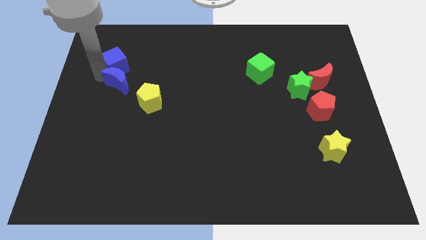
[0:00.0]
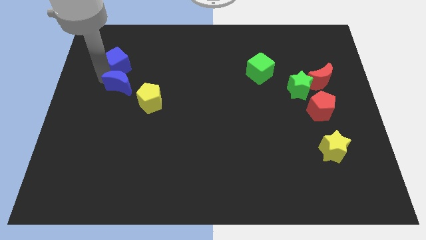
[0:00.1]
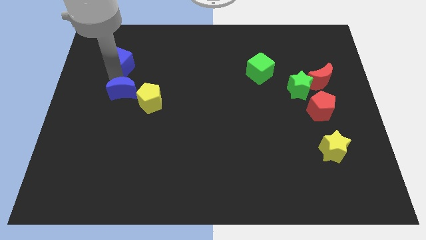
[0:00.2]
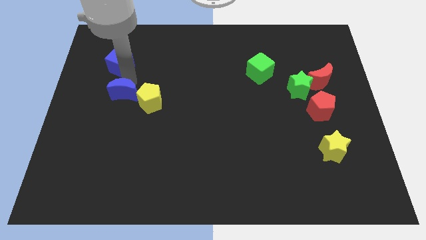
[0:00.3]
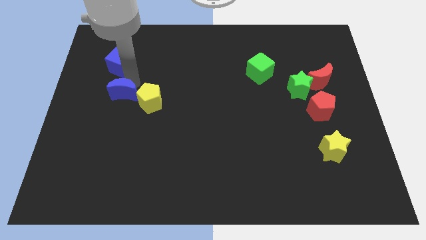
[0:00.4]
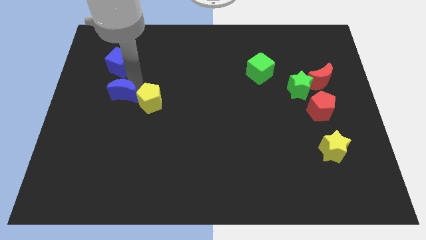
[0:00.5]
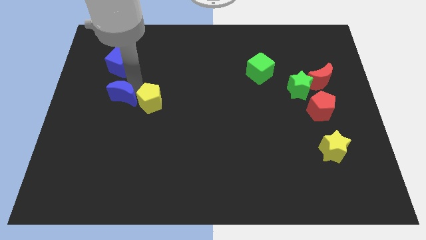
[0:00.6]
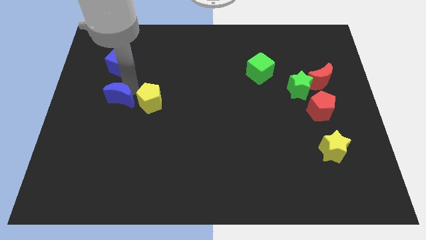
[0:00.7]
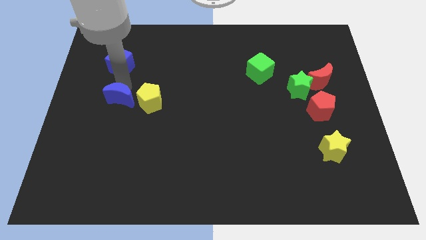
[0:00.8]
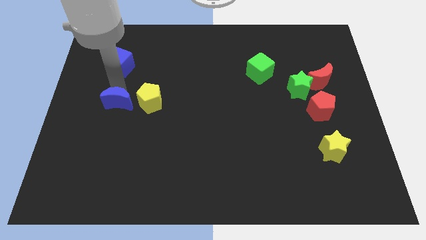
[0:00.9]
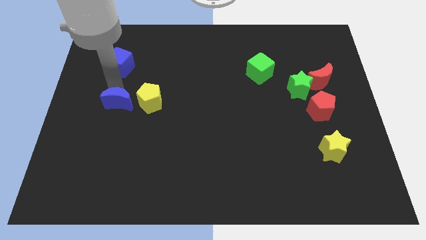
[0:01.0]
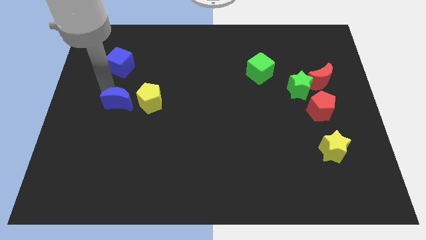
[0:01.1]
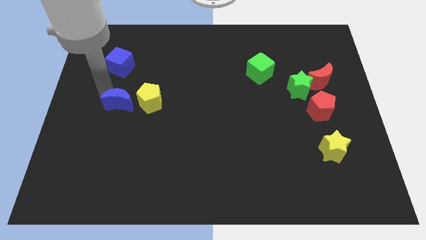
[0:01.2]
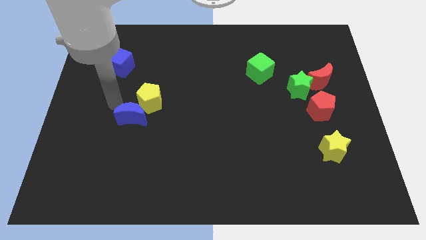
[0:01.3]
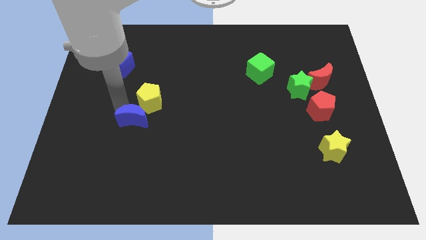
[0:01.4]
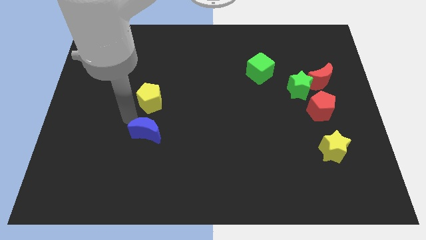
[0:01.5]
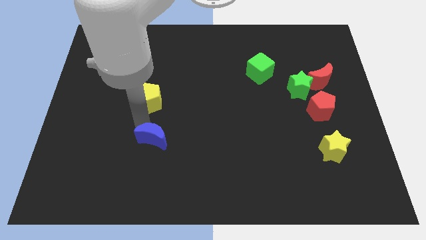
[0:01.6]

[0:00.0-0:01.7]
place the blue crescent below the yellow pentagon

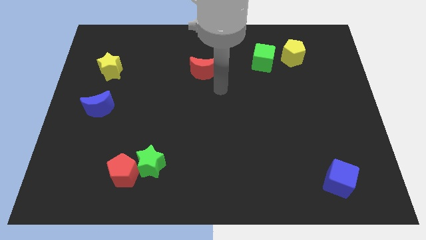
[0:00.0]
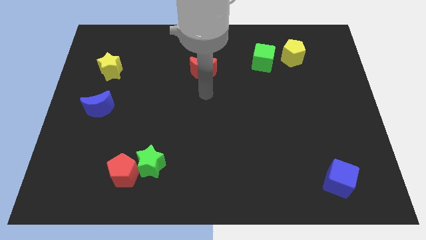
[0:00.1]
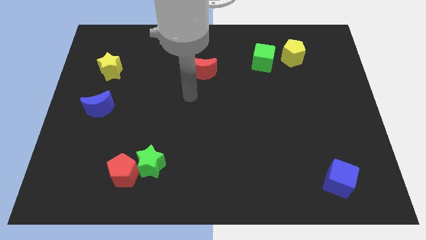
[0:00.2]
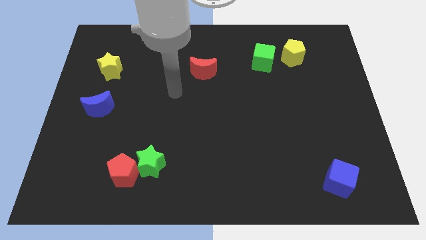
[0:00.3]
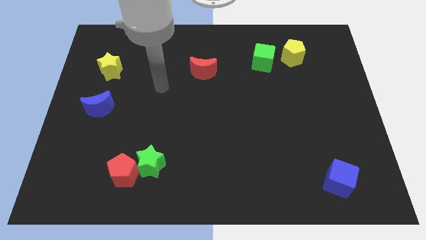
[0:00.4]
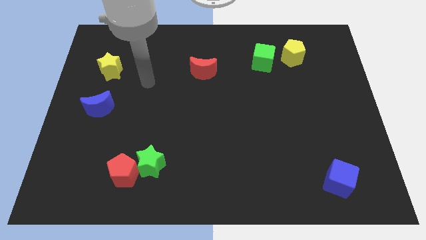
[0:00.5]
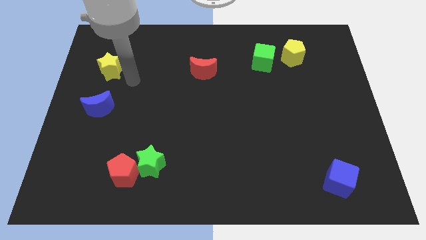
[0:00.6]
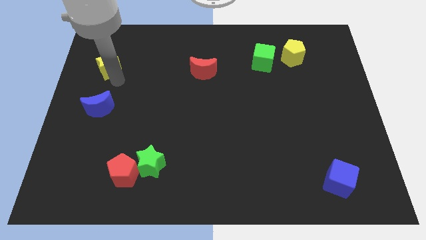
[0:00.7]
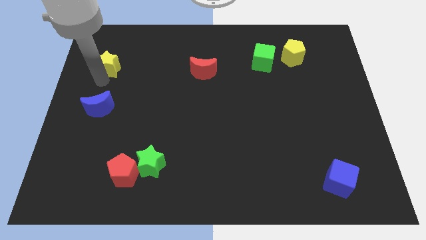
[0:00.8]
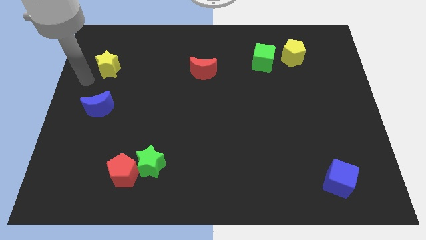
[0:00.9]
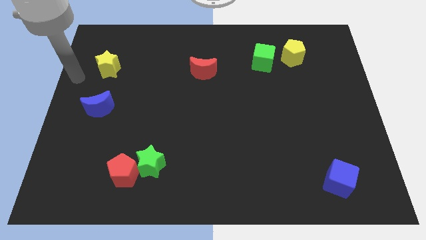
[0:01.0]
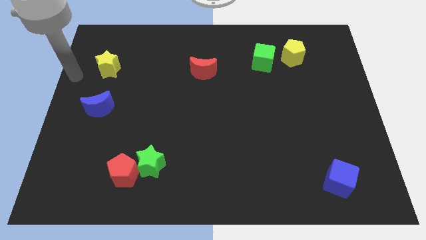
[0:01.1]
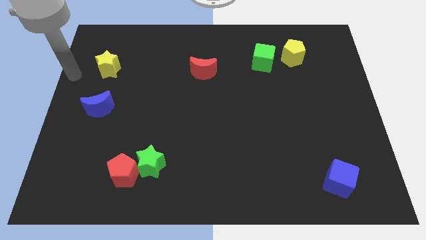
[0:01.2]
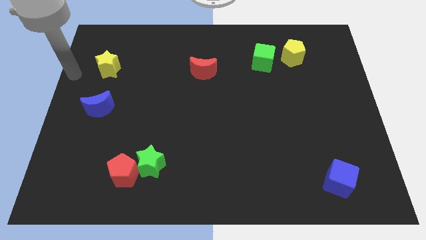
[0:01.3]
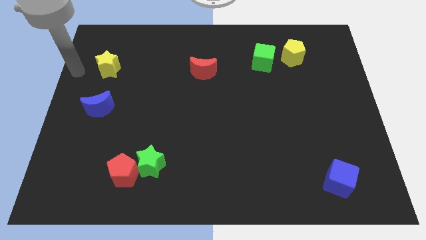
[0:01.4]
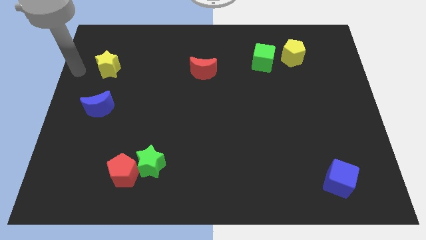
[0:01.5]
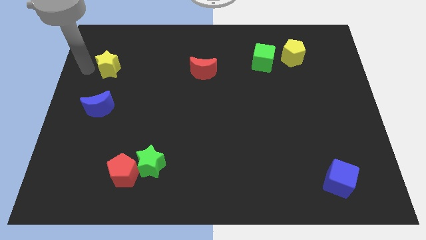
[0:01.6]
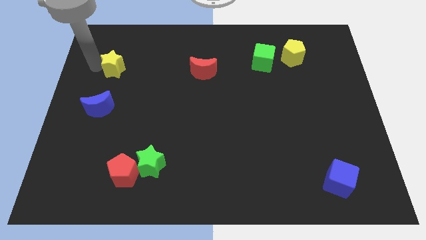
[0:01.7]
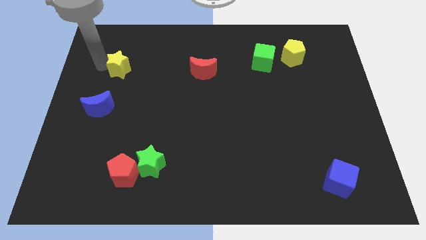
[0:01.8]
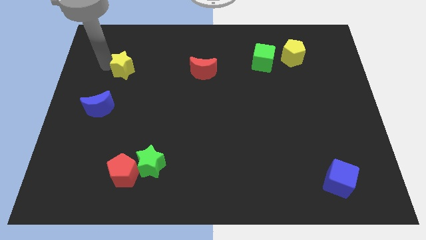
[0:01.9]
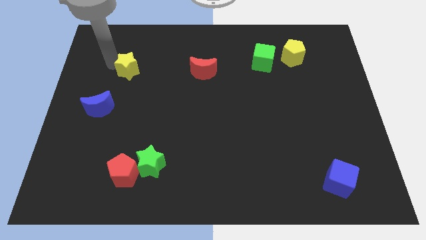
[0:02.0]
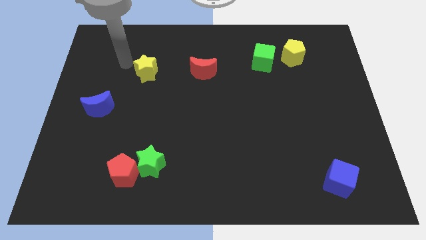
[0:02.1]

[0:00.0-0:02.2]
place the yellow star horizontally to the left side of the red crescent

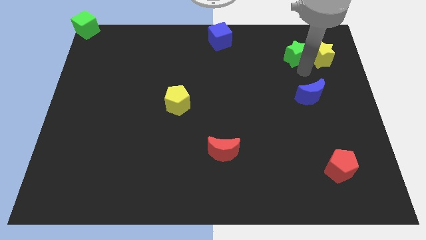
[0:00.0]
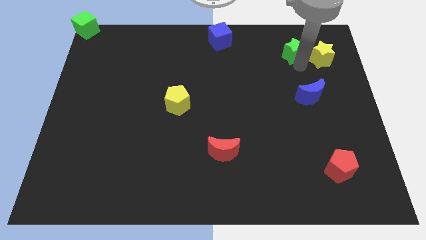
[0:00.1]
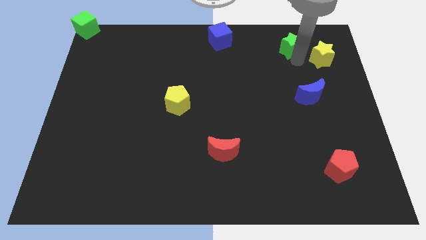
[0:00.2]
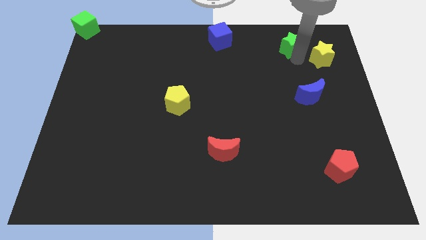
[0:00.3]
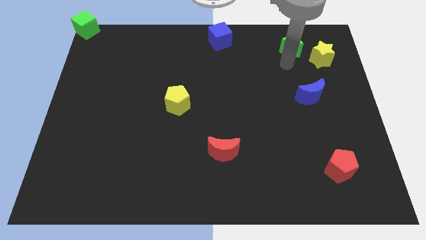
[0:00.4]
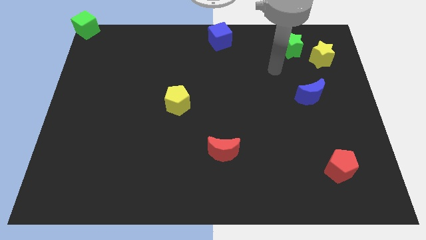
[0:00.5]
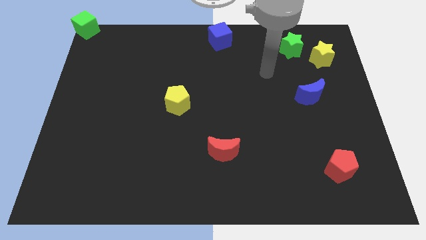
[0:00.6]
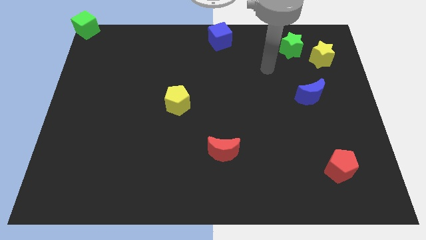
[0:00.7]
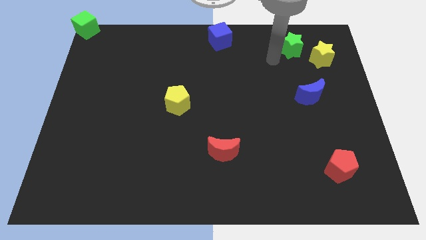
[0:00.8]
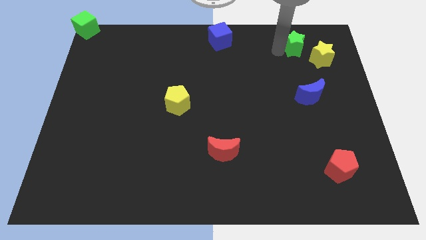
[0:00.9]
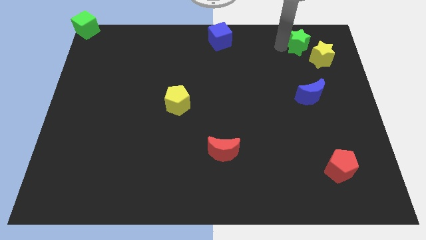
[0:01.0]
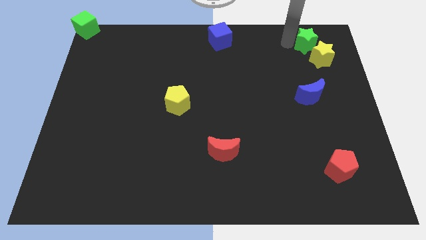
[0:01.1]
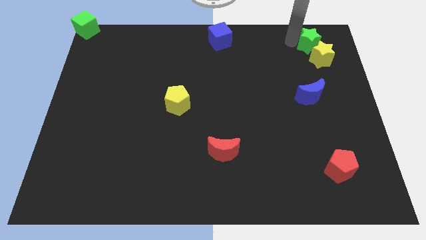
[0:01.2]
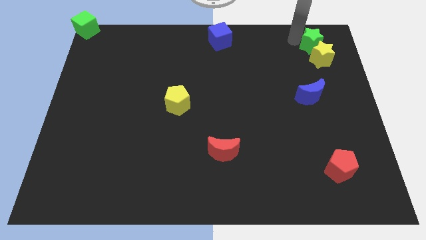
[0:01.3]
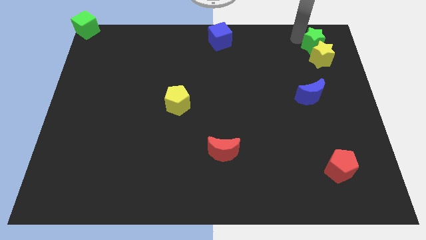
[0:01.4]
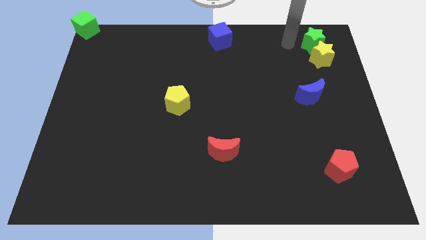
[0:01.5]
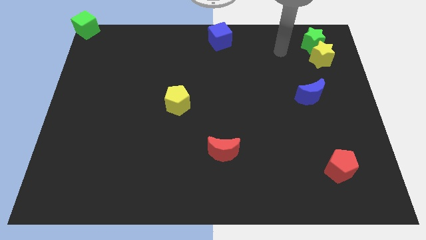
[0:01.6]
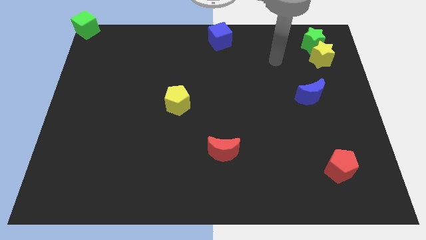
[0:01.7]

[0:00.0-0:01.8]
place green star above yellow star

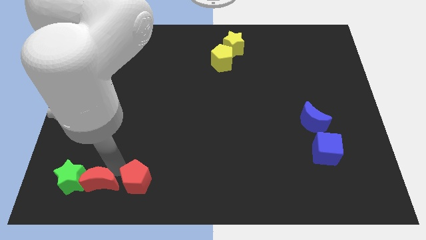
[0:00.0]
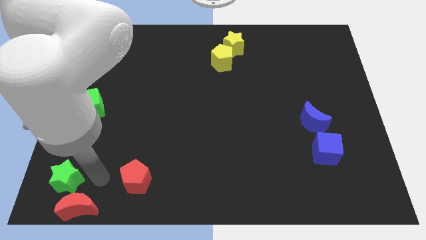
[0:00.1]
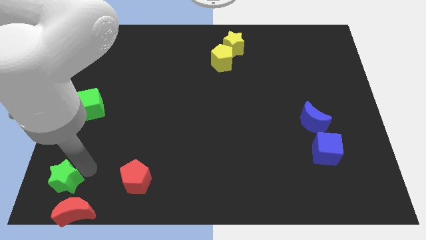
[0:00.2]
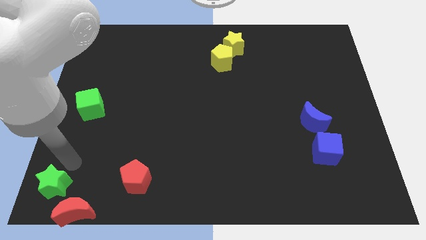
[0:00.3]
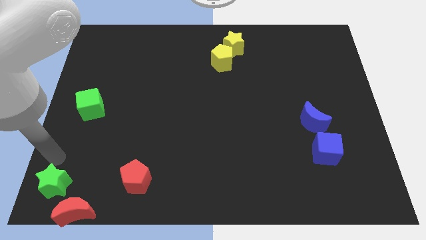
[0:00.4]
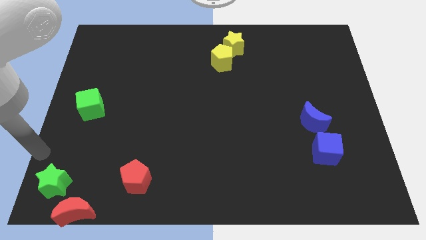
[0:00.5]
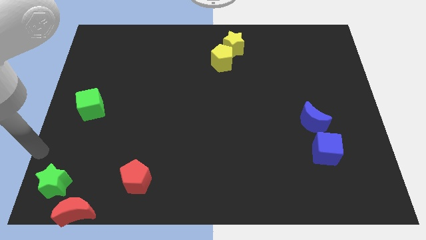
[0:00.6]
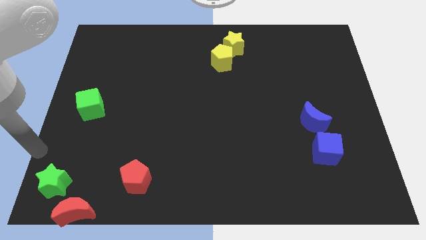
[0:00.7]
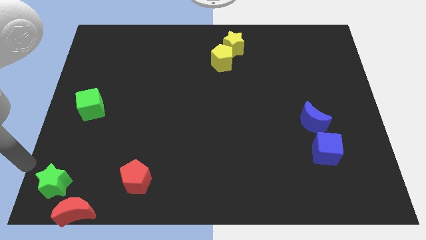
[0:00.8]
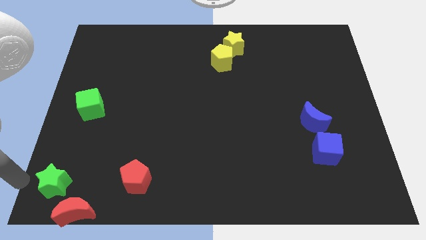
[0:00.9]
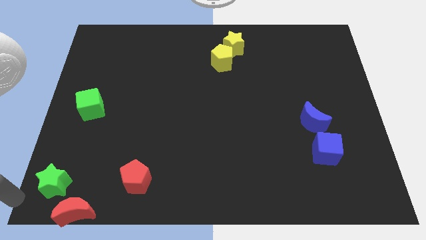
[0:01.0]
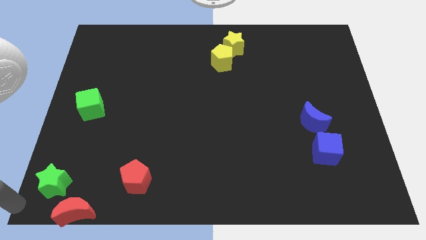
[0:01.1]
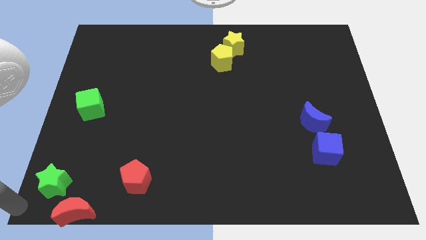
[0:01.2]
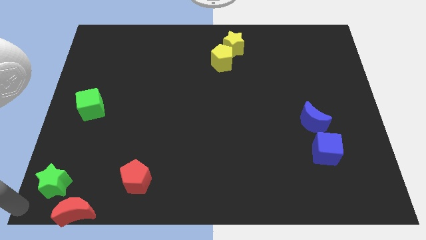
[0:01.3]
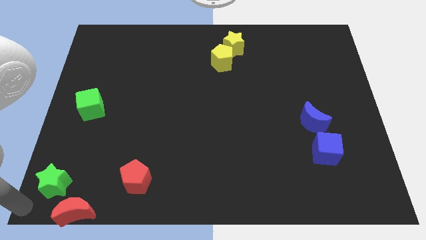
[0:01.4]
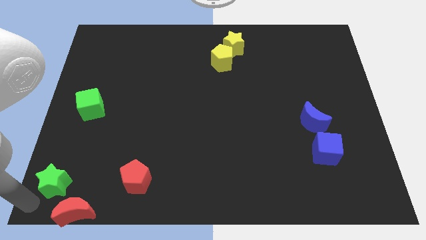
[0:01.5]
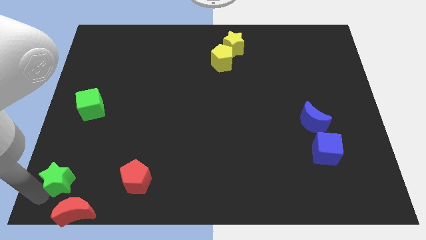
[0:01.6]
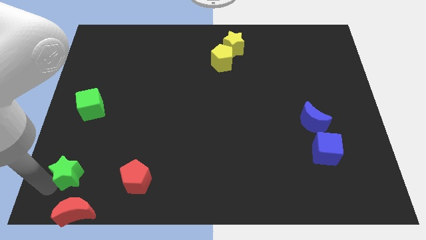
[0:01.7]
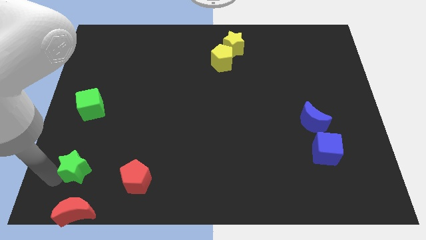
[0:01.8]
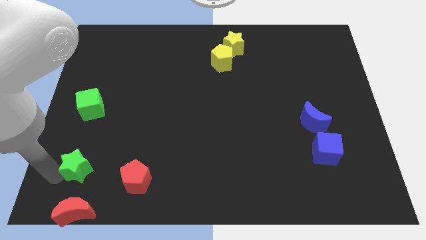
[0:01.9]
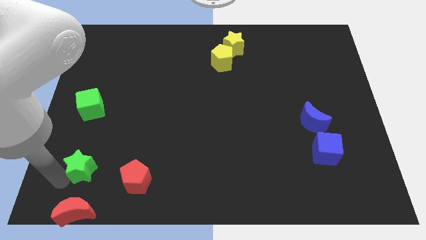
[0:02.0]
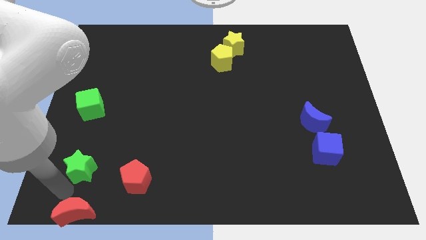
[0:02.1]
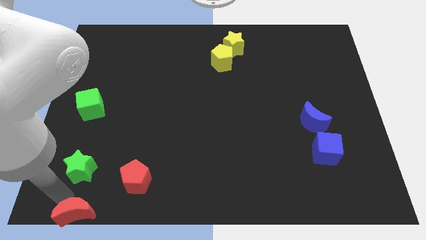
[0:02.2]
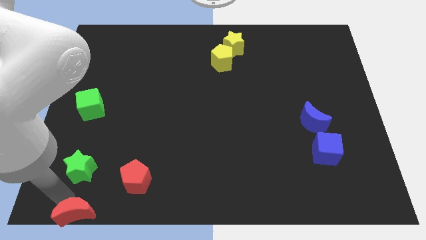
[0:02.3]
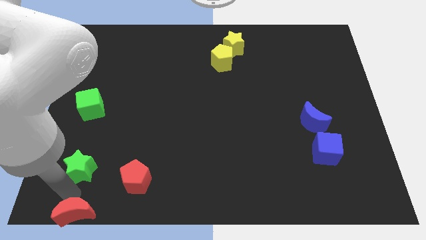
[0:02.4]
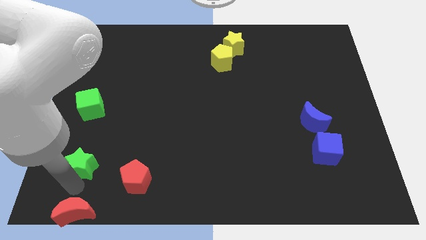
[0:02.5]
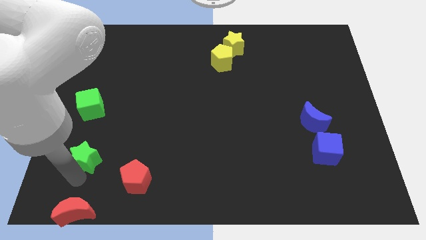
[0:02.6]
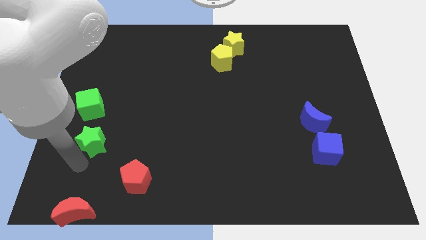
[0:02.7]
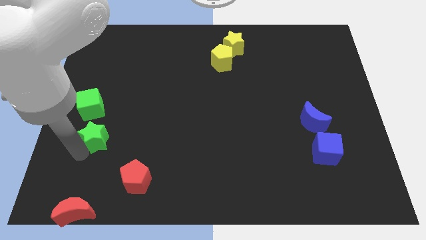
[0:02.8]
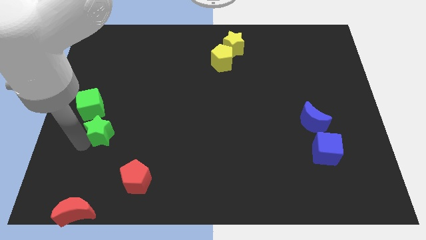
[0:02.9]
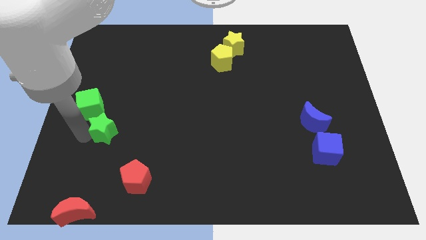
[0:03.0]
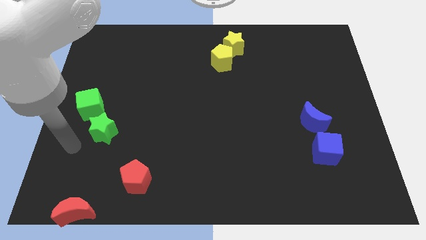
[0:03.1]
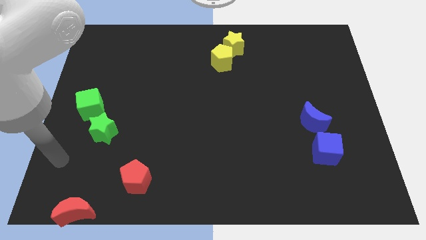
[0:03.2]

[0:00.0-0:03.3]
drag the green star between the green cube and red pentagon
